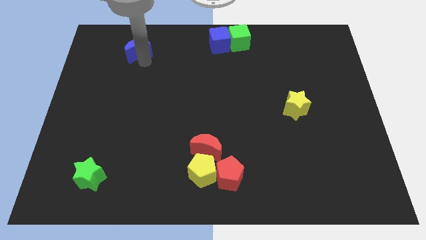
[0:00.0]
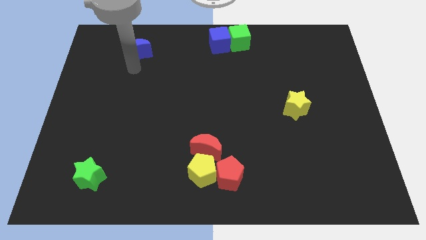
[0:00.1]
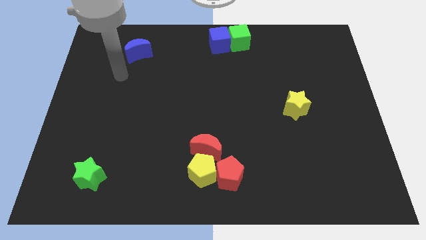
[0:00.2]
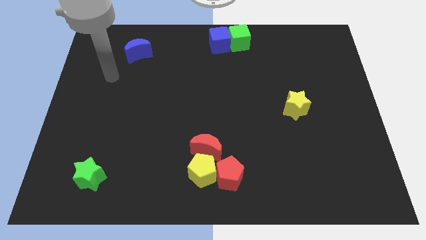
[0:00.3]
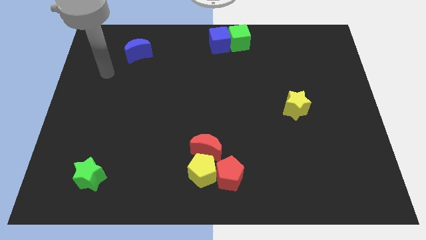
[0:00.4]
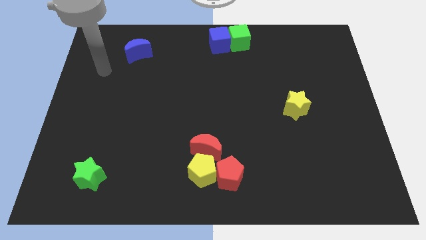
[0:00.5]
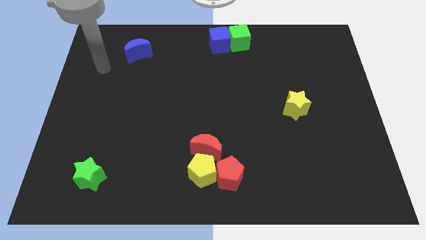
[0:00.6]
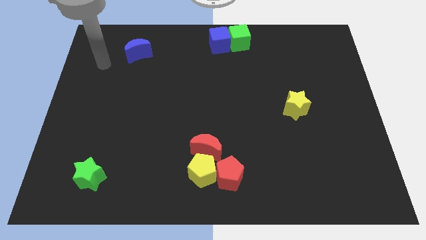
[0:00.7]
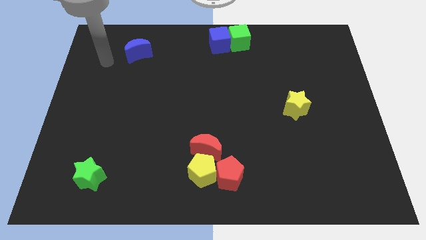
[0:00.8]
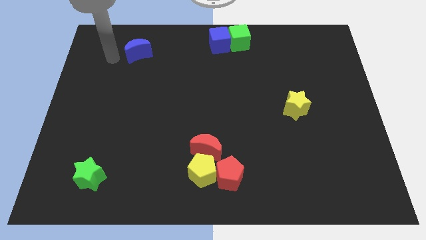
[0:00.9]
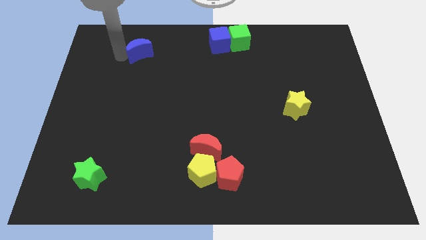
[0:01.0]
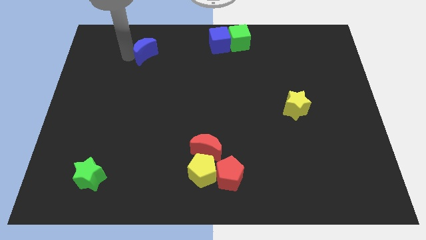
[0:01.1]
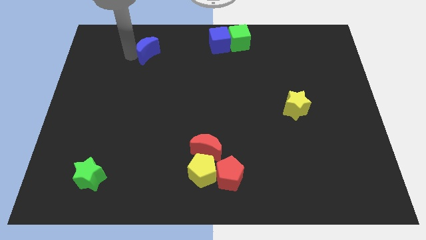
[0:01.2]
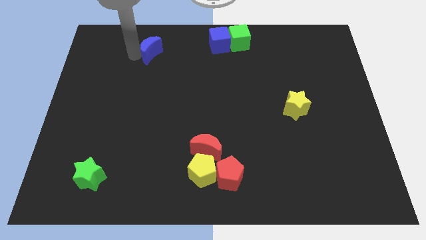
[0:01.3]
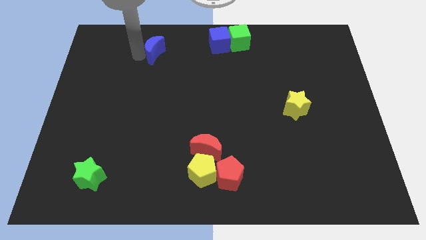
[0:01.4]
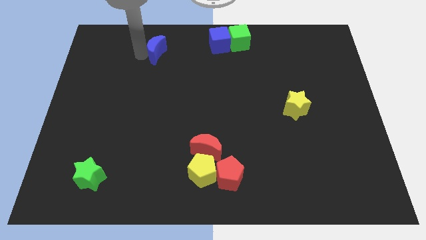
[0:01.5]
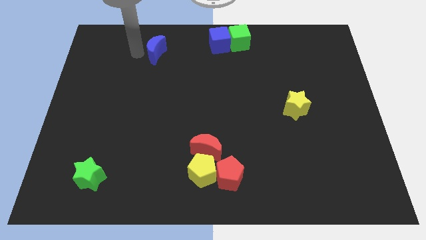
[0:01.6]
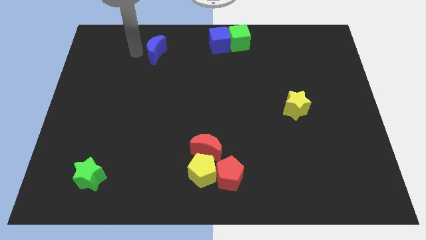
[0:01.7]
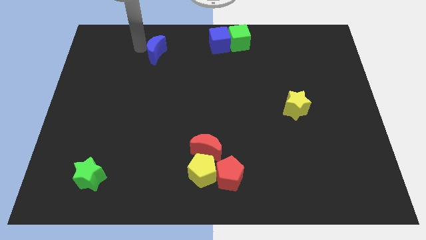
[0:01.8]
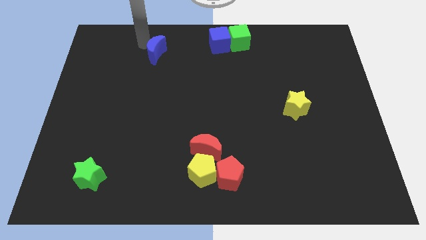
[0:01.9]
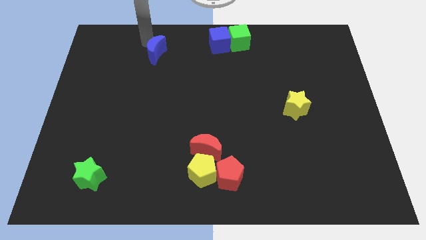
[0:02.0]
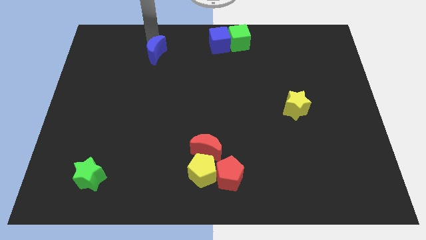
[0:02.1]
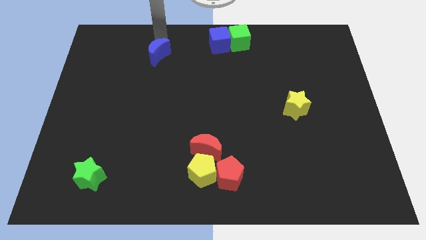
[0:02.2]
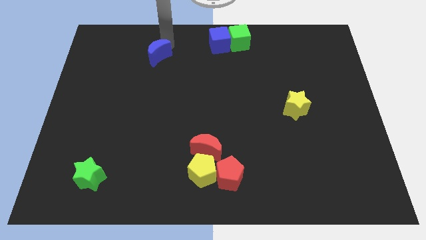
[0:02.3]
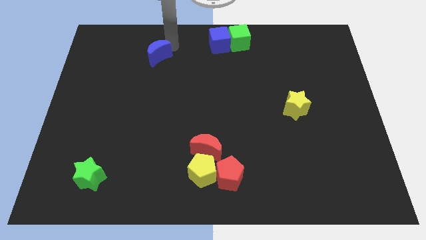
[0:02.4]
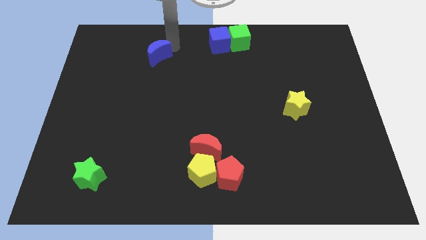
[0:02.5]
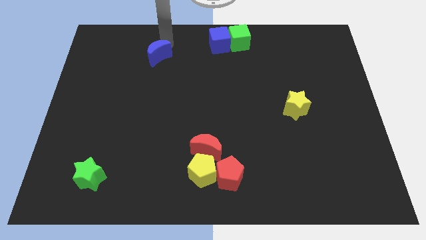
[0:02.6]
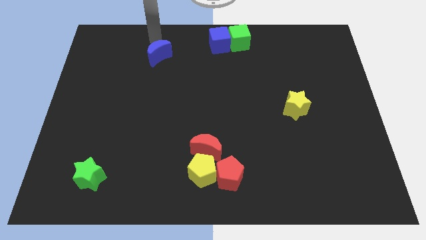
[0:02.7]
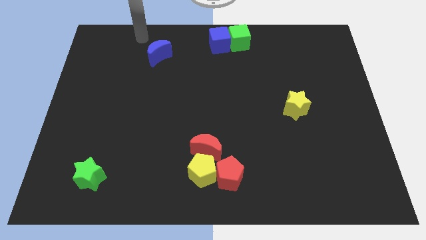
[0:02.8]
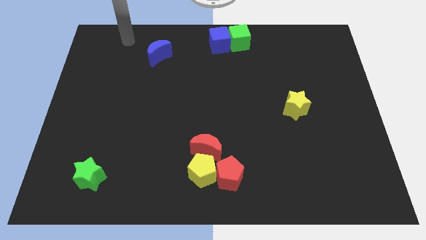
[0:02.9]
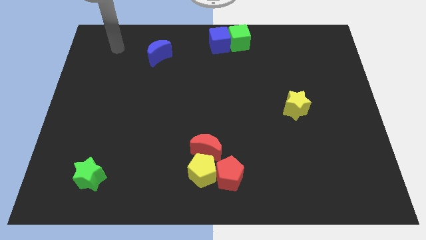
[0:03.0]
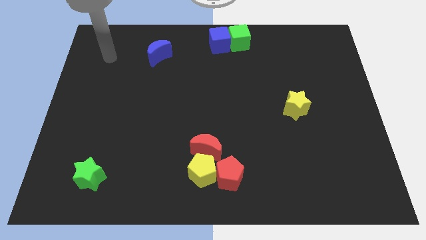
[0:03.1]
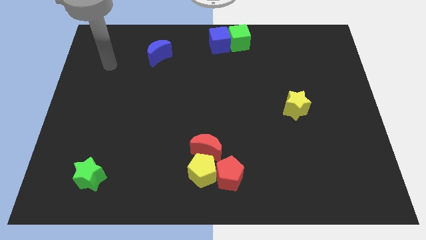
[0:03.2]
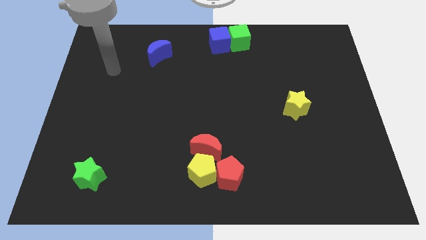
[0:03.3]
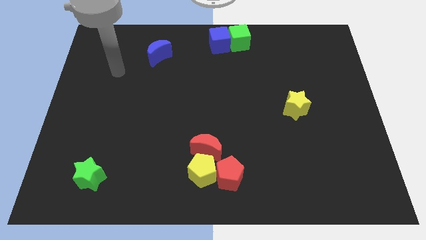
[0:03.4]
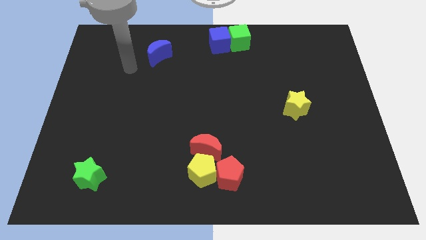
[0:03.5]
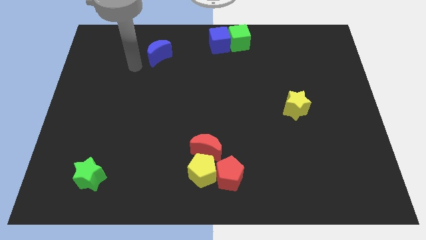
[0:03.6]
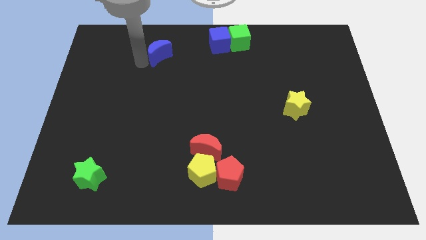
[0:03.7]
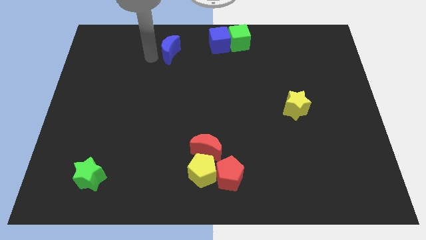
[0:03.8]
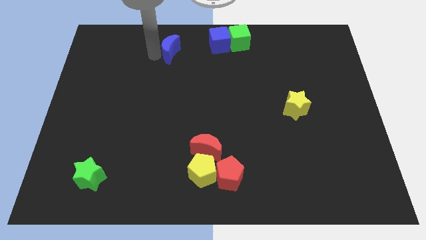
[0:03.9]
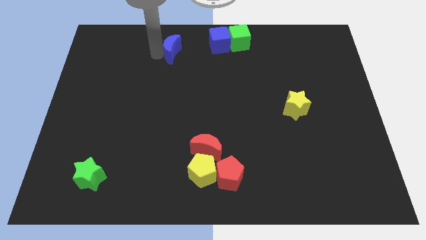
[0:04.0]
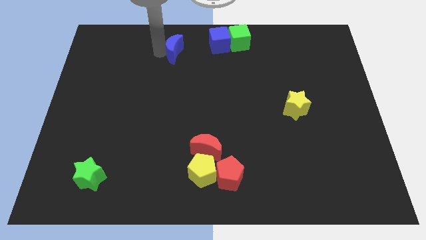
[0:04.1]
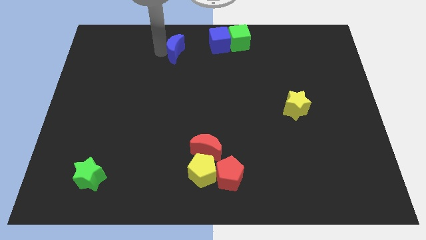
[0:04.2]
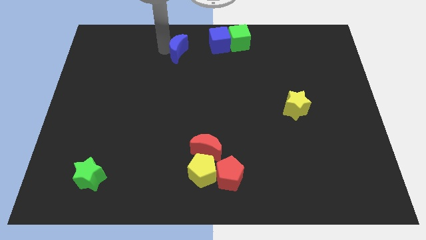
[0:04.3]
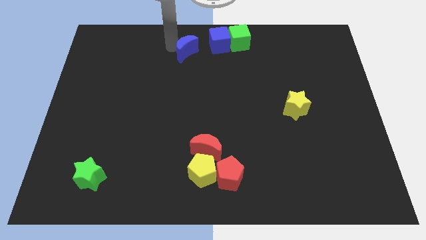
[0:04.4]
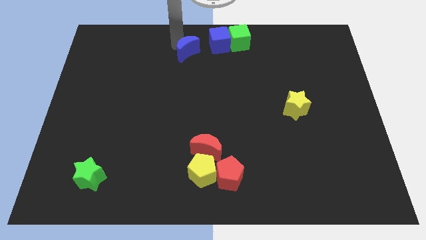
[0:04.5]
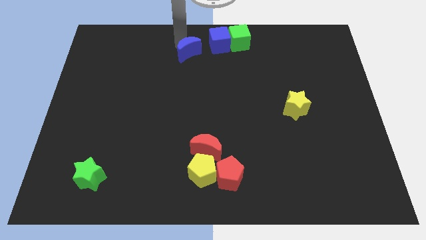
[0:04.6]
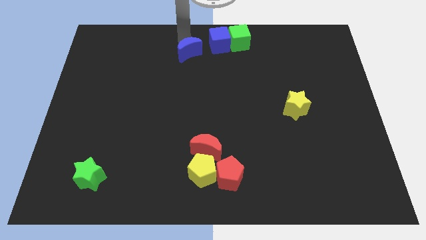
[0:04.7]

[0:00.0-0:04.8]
push the blue moon towards the left side of the blue cube

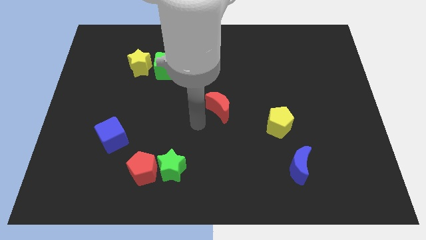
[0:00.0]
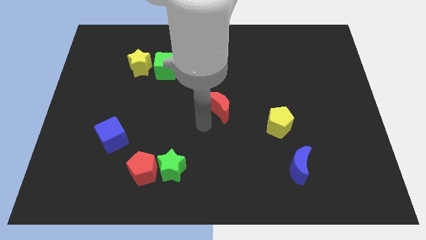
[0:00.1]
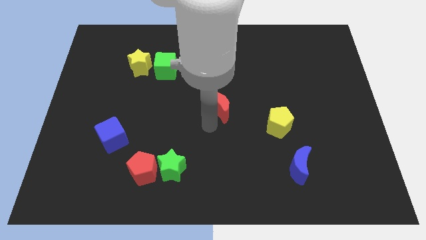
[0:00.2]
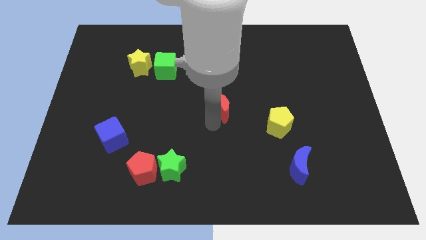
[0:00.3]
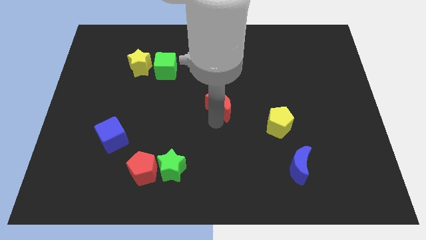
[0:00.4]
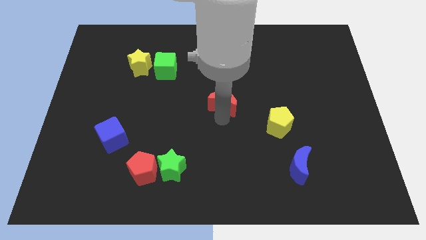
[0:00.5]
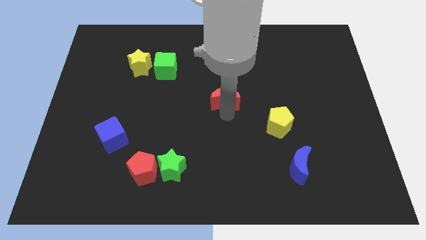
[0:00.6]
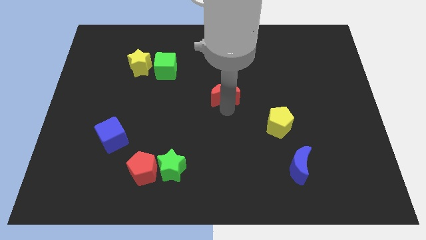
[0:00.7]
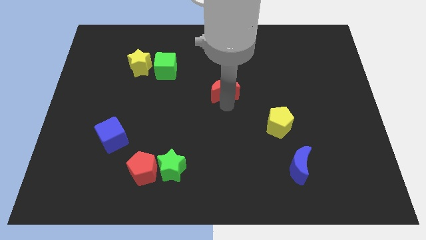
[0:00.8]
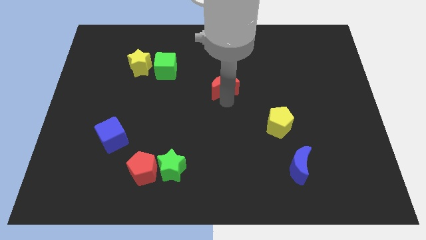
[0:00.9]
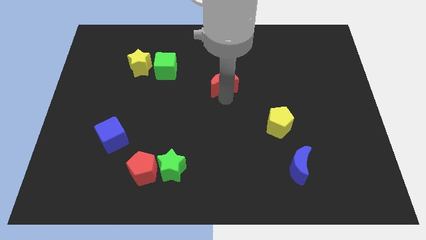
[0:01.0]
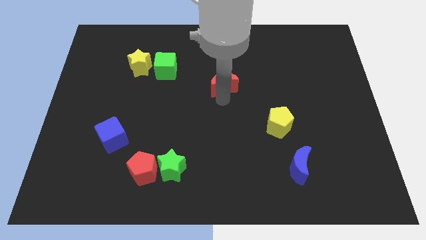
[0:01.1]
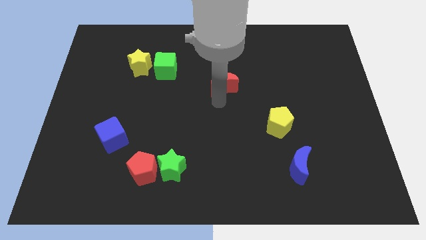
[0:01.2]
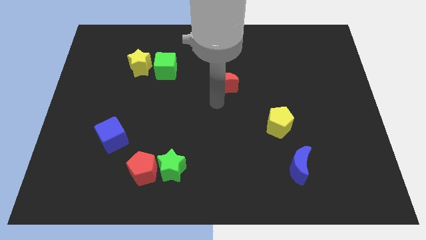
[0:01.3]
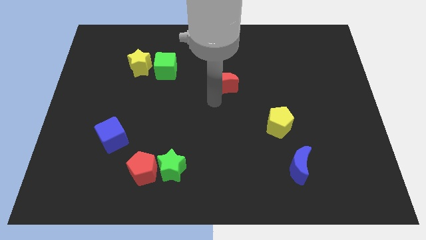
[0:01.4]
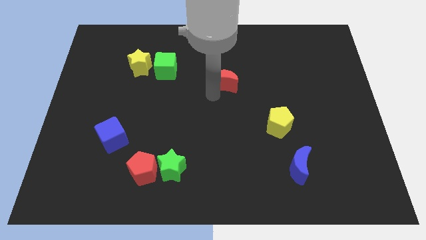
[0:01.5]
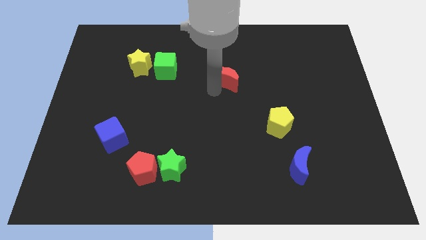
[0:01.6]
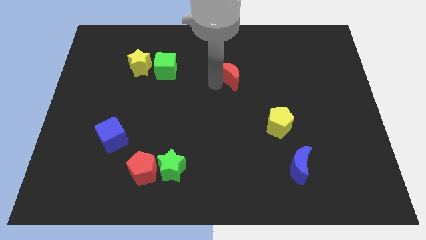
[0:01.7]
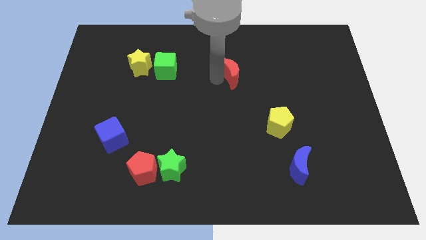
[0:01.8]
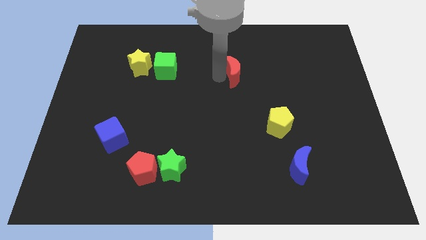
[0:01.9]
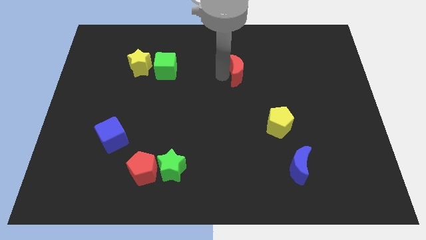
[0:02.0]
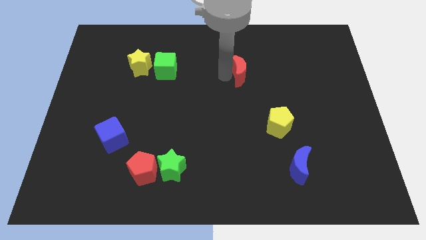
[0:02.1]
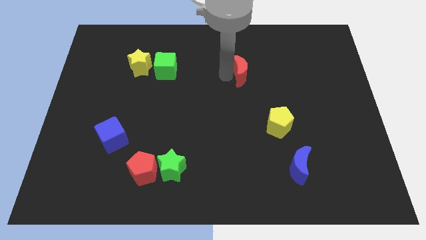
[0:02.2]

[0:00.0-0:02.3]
place red crescent right to green cube

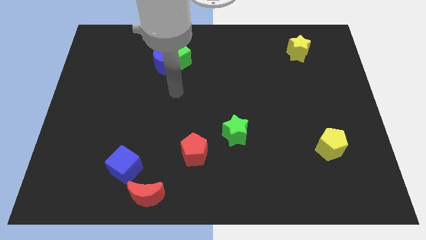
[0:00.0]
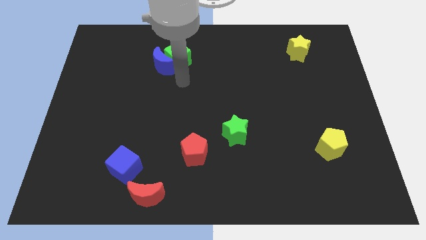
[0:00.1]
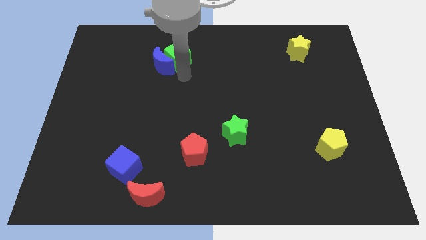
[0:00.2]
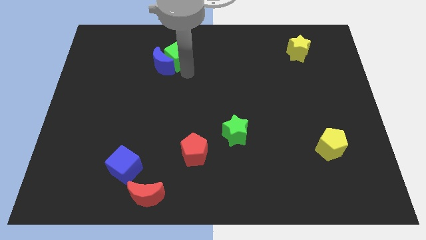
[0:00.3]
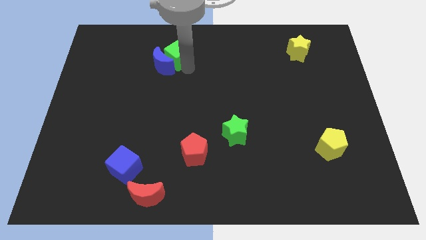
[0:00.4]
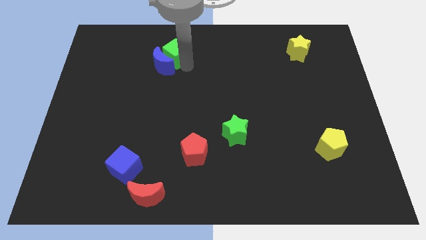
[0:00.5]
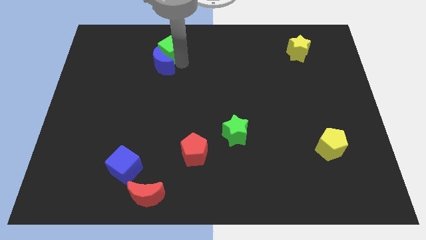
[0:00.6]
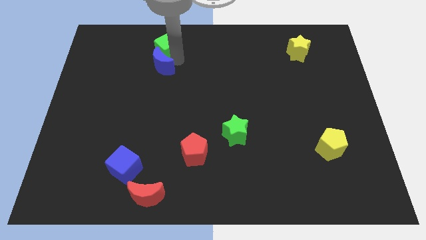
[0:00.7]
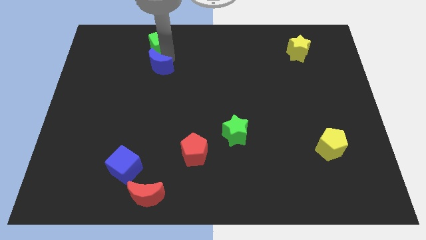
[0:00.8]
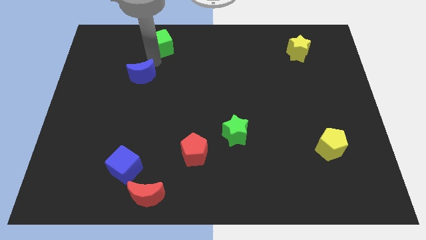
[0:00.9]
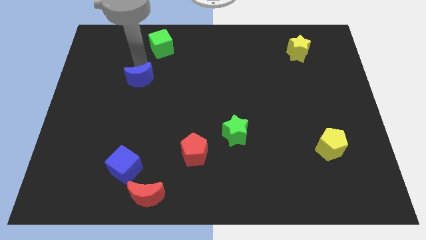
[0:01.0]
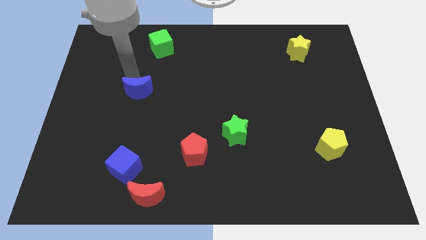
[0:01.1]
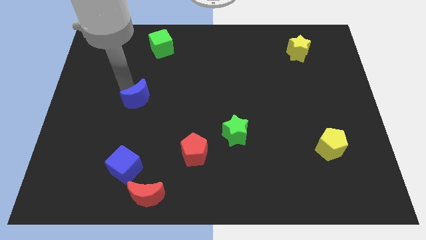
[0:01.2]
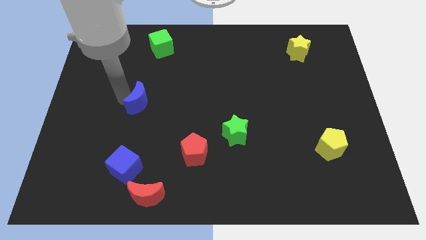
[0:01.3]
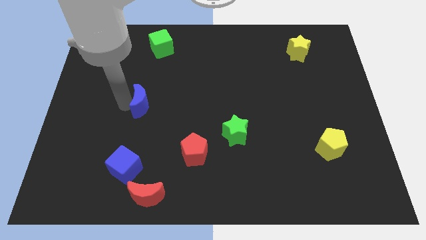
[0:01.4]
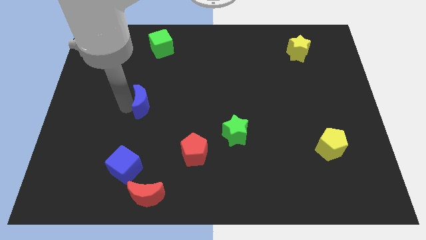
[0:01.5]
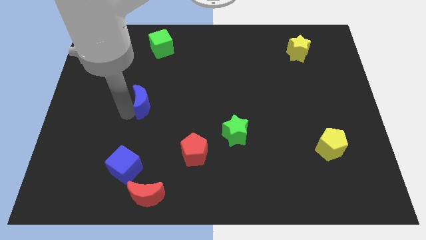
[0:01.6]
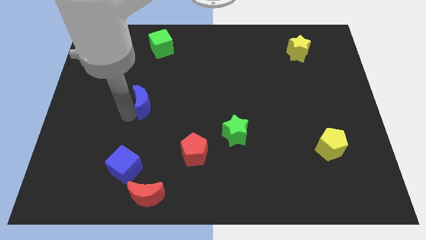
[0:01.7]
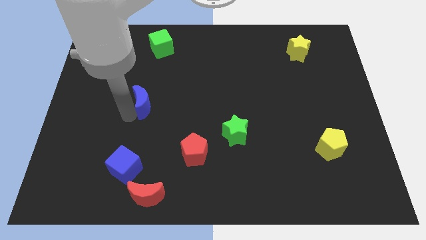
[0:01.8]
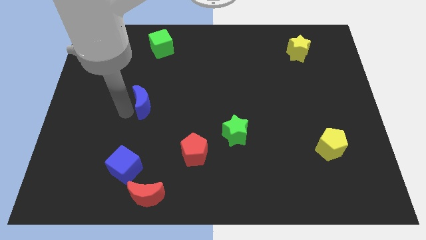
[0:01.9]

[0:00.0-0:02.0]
push blue moon downwards slightly
